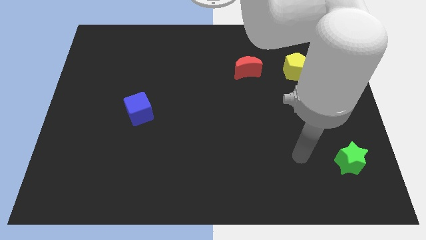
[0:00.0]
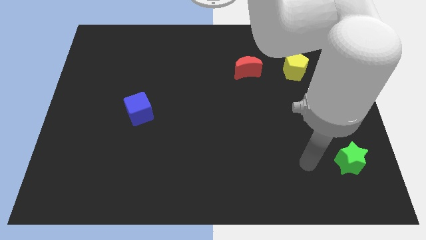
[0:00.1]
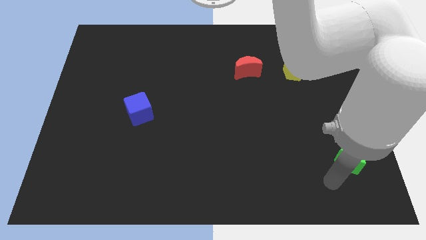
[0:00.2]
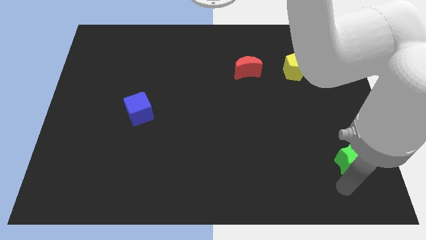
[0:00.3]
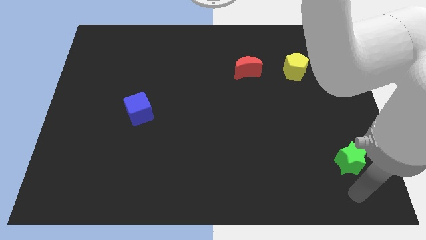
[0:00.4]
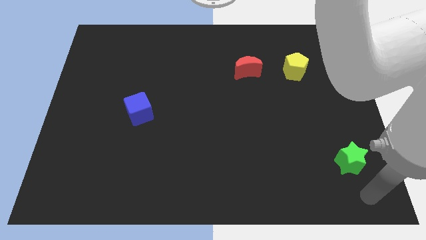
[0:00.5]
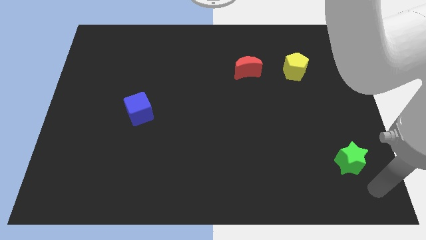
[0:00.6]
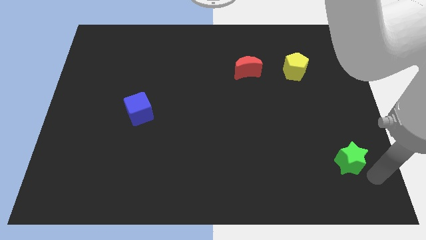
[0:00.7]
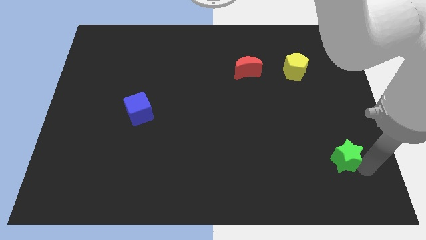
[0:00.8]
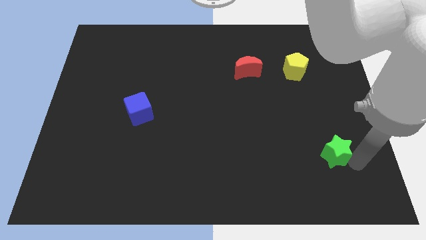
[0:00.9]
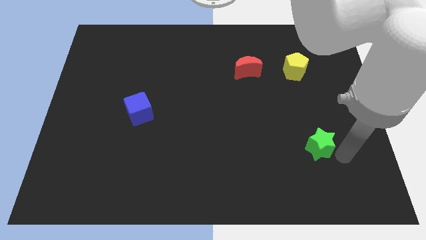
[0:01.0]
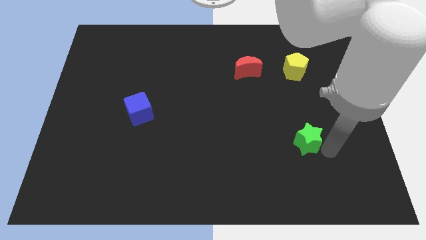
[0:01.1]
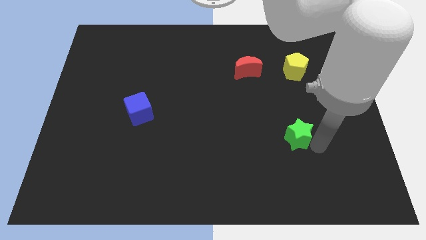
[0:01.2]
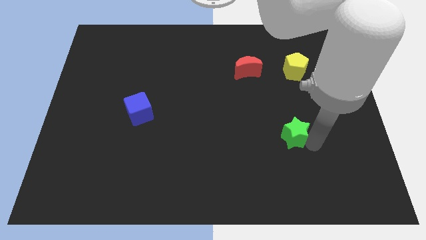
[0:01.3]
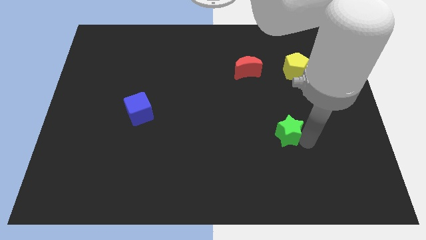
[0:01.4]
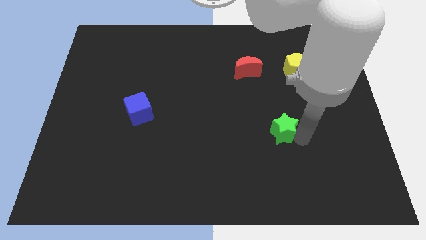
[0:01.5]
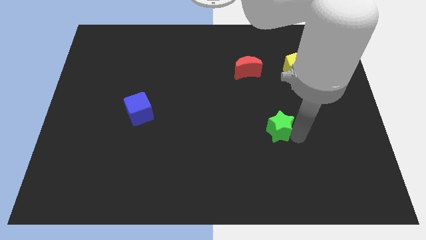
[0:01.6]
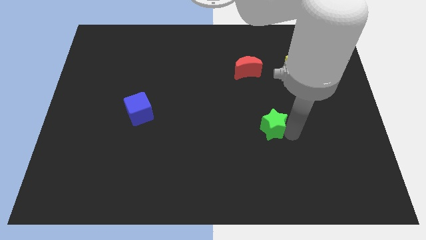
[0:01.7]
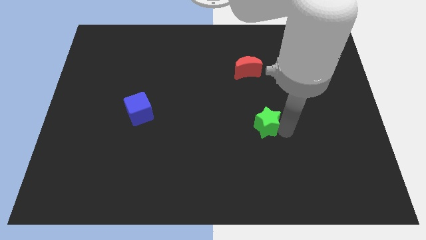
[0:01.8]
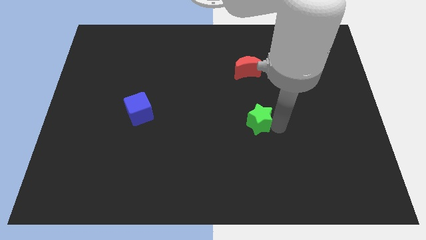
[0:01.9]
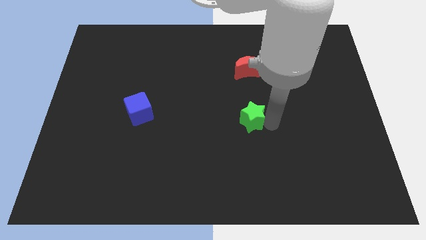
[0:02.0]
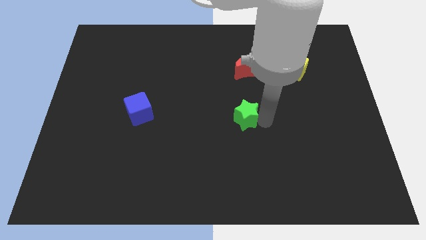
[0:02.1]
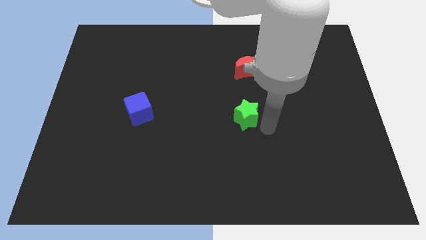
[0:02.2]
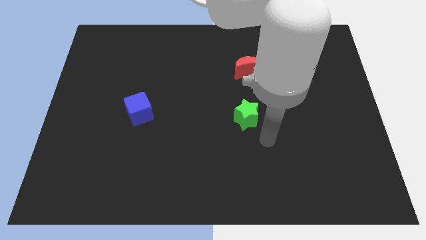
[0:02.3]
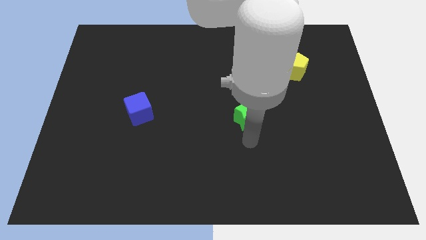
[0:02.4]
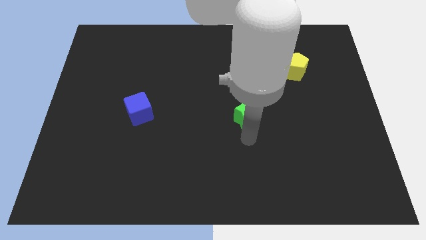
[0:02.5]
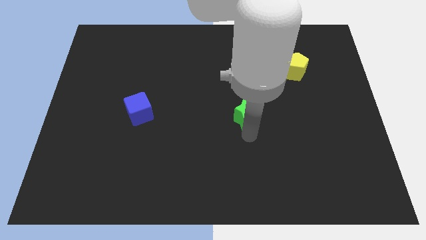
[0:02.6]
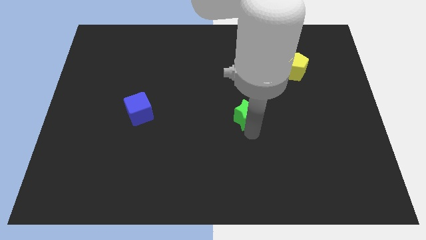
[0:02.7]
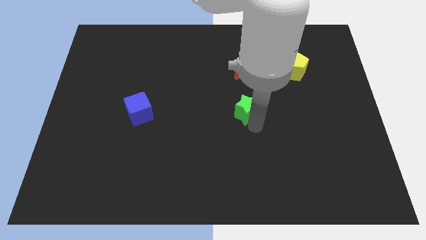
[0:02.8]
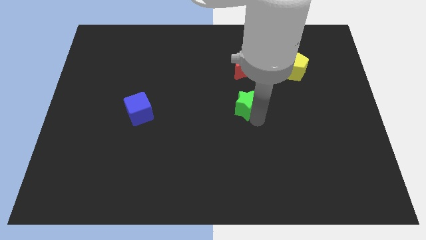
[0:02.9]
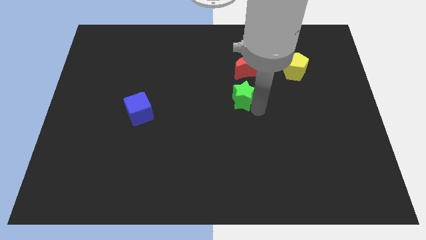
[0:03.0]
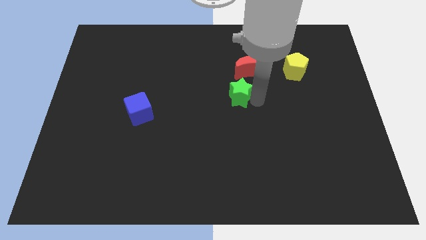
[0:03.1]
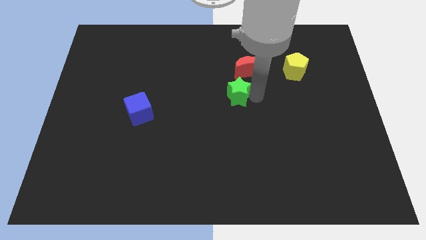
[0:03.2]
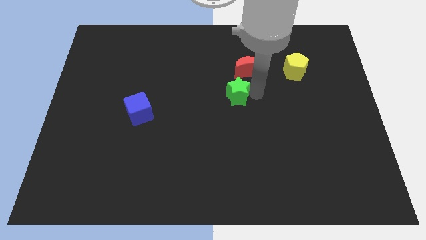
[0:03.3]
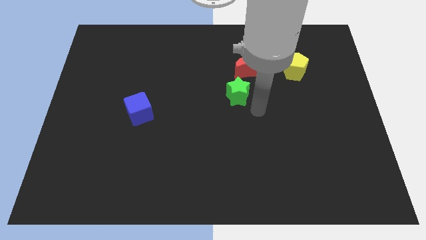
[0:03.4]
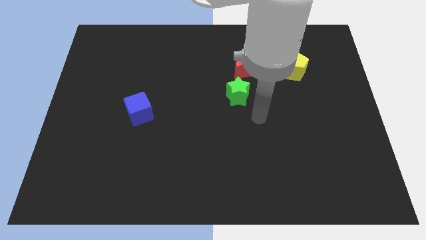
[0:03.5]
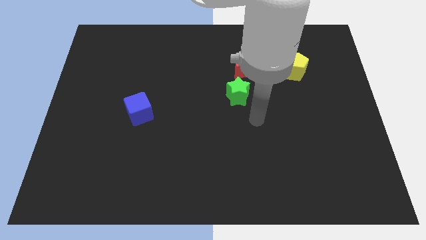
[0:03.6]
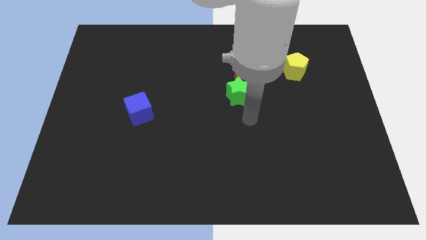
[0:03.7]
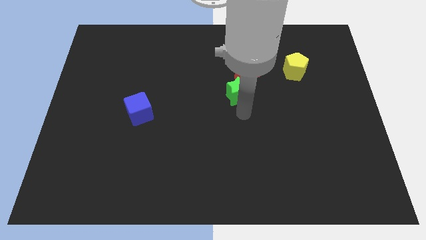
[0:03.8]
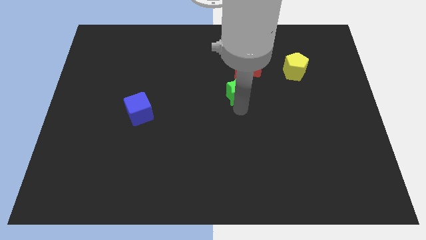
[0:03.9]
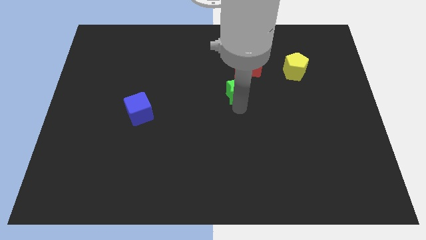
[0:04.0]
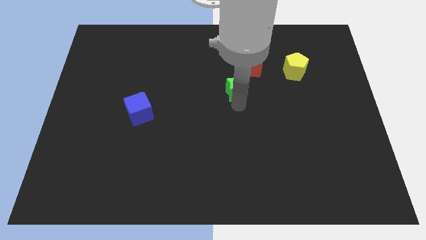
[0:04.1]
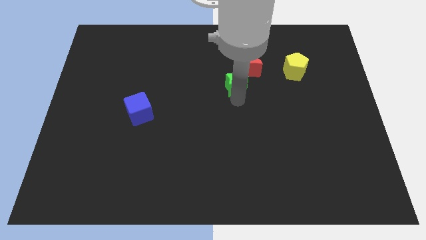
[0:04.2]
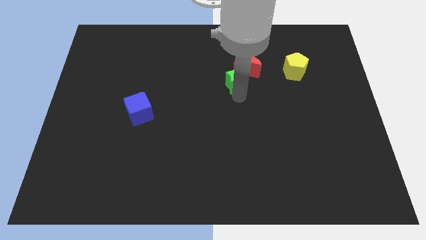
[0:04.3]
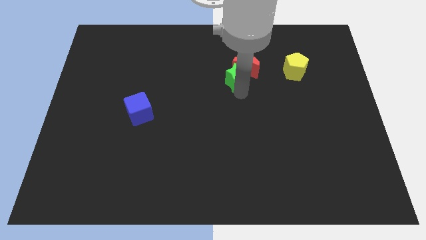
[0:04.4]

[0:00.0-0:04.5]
put the green block towards the red block

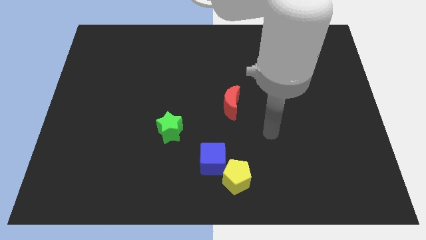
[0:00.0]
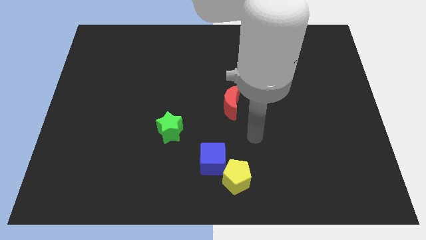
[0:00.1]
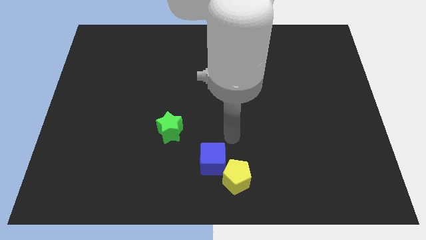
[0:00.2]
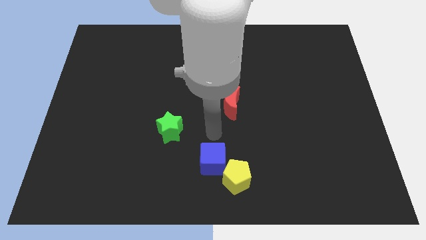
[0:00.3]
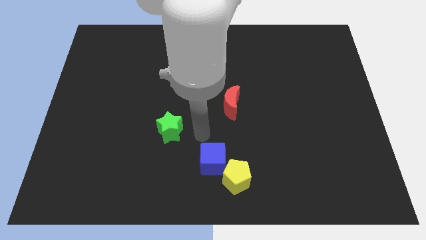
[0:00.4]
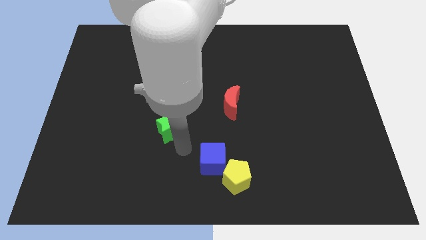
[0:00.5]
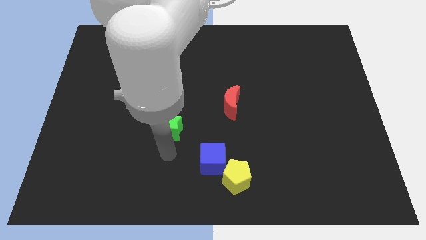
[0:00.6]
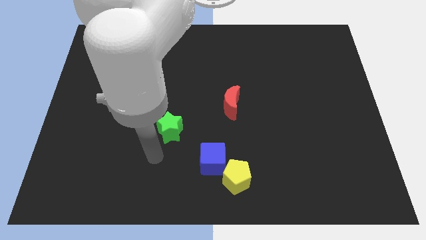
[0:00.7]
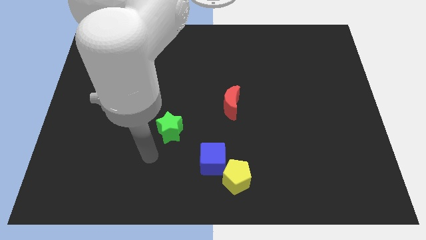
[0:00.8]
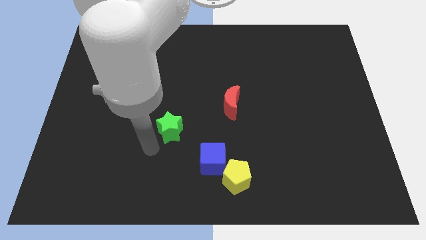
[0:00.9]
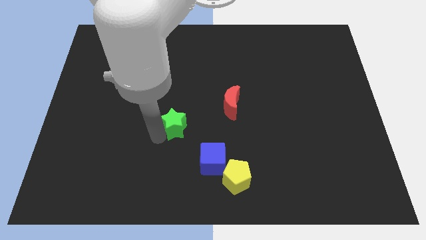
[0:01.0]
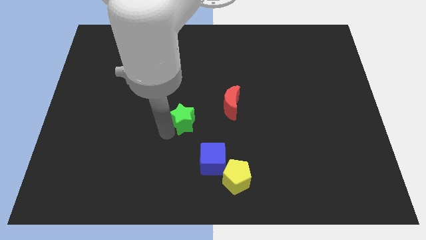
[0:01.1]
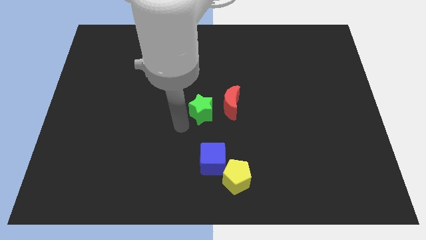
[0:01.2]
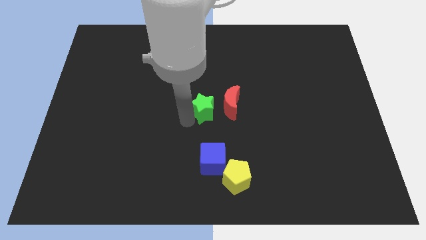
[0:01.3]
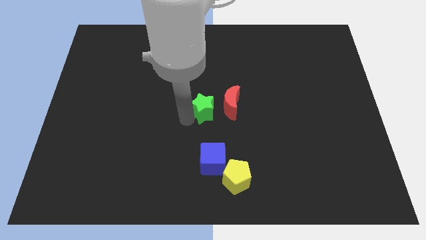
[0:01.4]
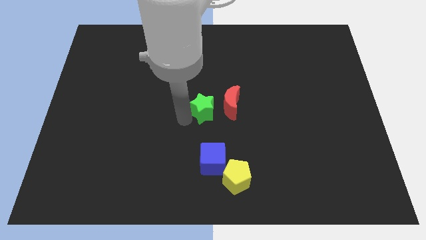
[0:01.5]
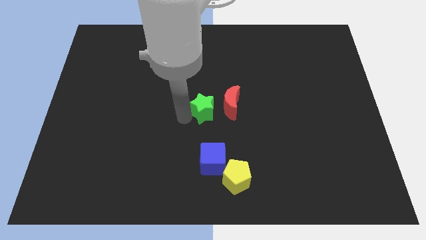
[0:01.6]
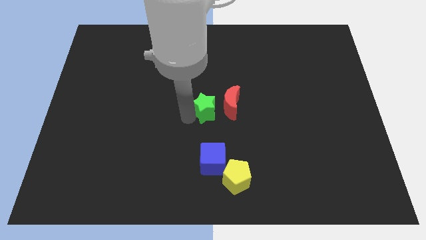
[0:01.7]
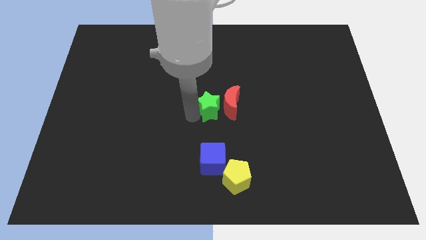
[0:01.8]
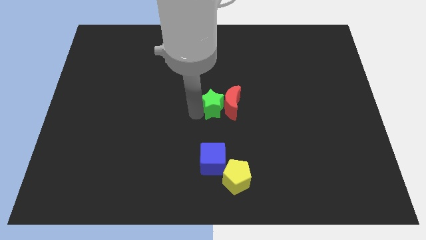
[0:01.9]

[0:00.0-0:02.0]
push the star to the red block

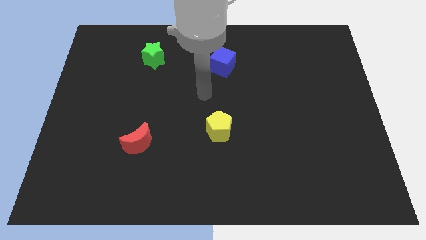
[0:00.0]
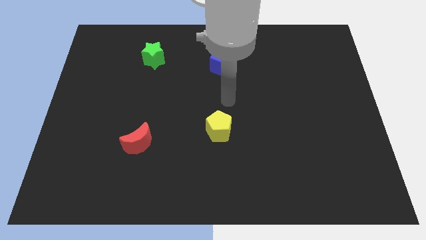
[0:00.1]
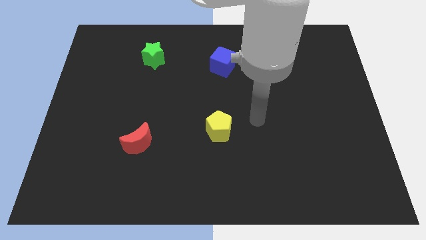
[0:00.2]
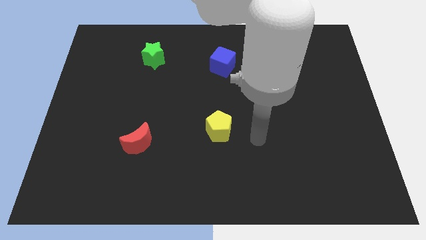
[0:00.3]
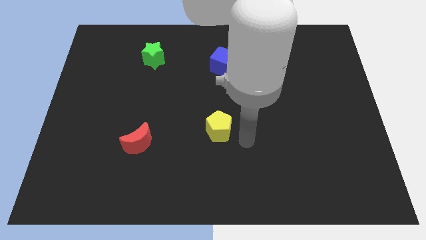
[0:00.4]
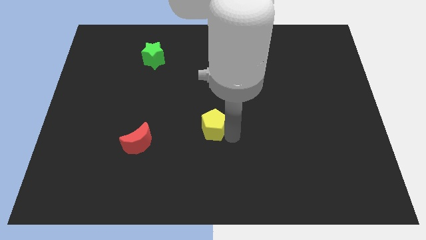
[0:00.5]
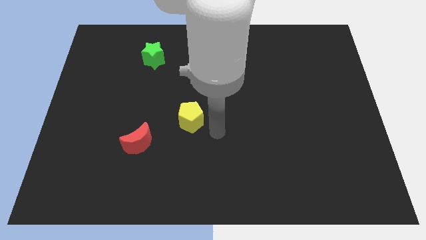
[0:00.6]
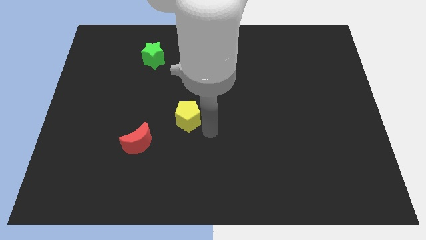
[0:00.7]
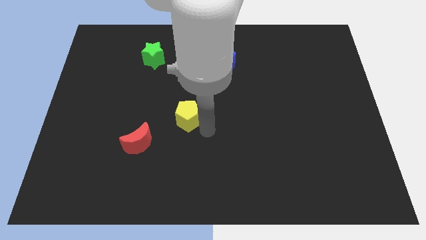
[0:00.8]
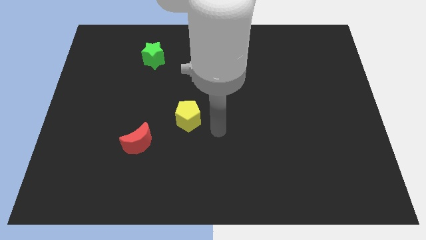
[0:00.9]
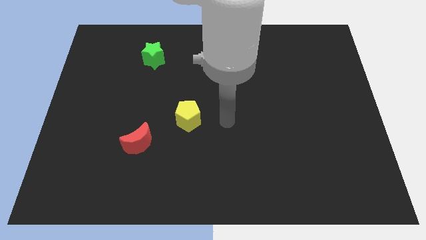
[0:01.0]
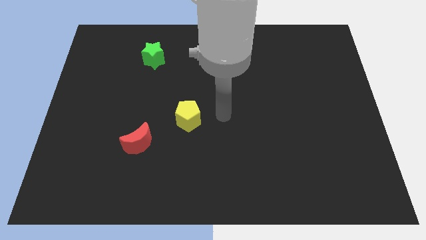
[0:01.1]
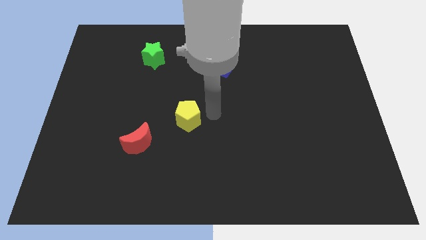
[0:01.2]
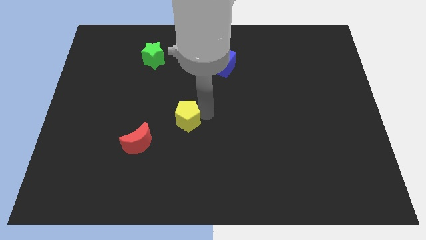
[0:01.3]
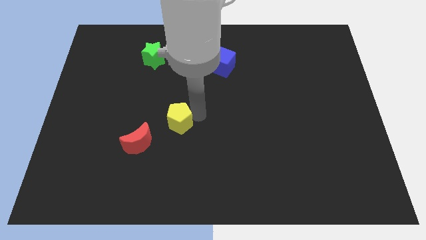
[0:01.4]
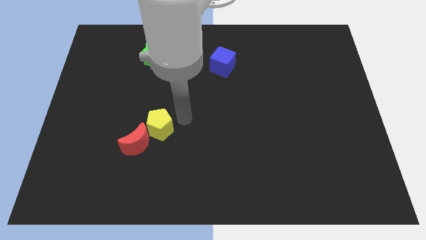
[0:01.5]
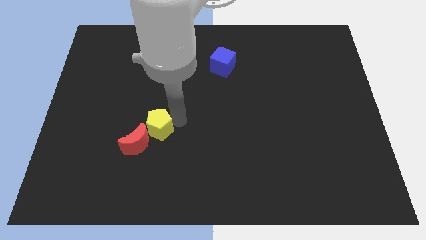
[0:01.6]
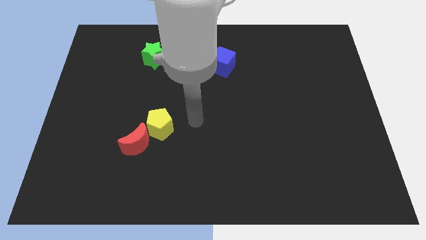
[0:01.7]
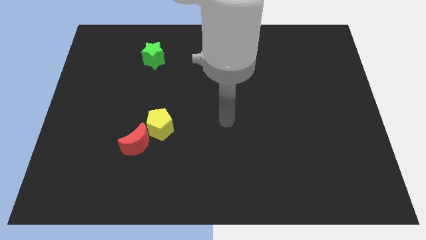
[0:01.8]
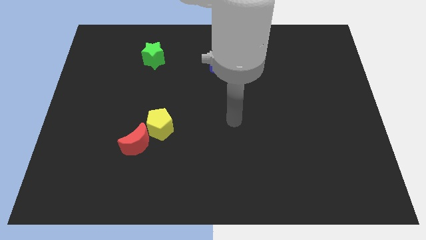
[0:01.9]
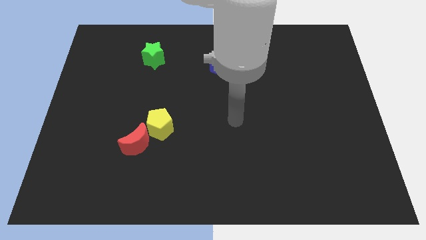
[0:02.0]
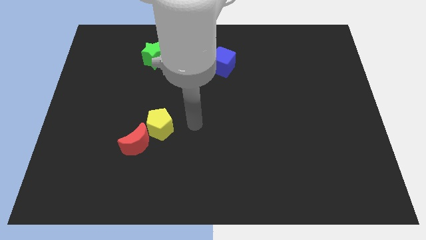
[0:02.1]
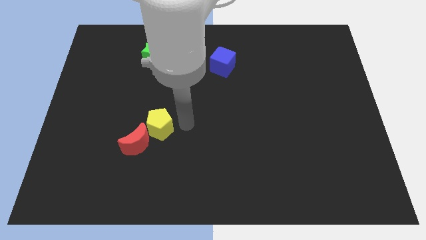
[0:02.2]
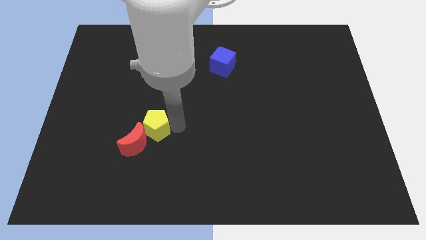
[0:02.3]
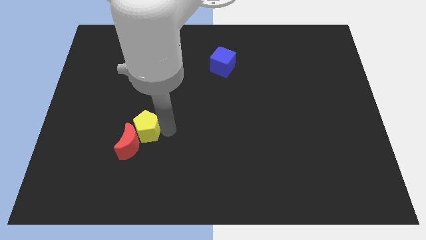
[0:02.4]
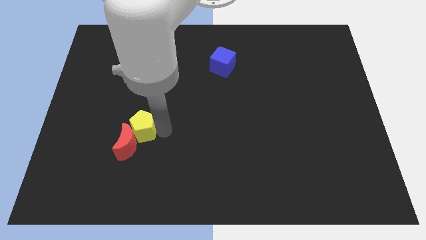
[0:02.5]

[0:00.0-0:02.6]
slide the pentagon close to the red block
